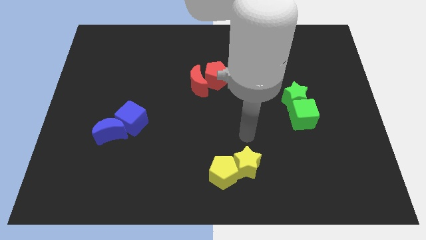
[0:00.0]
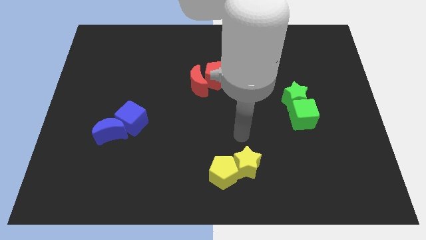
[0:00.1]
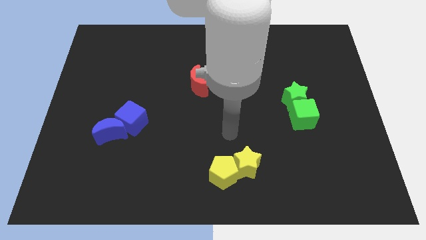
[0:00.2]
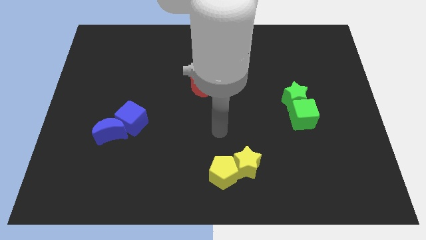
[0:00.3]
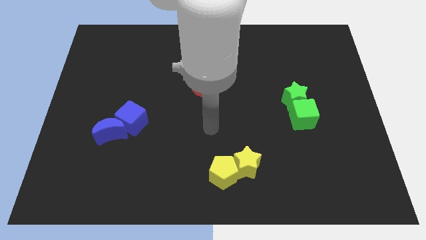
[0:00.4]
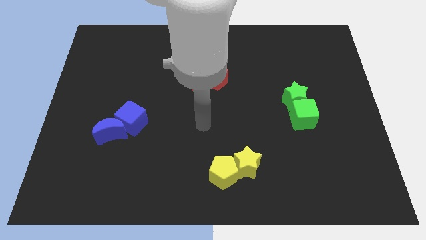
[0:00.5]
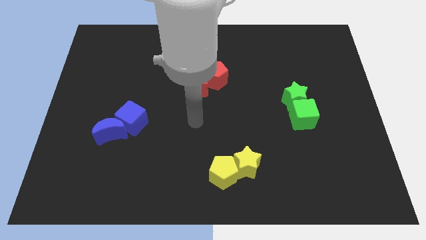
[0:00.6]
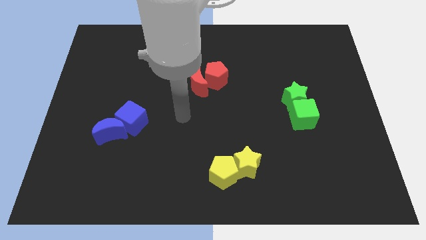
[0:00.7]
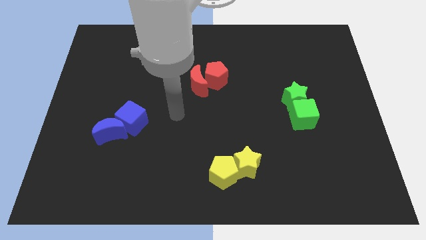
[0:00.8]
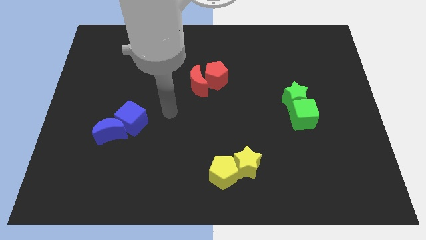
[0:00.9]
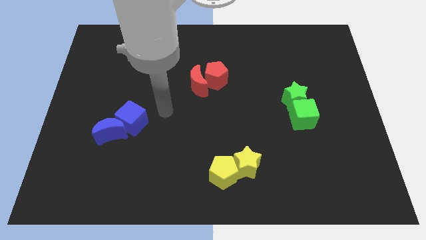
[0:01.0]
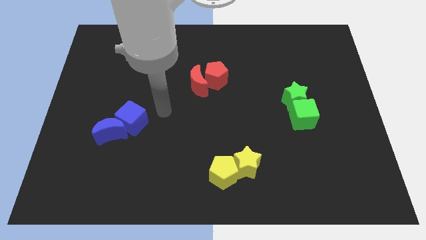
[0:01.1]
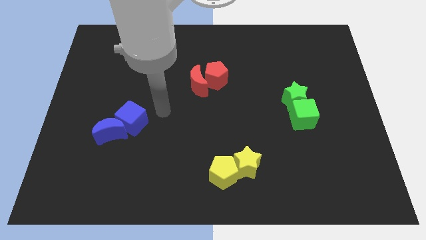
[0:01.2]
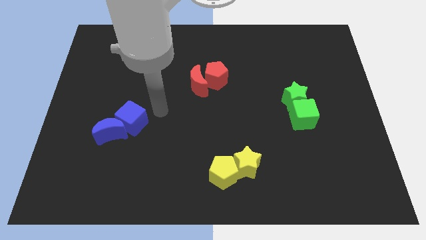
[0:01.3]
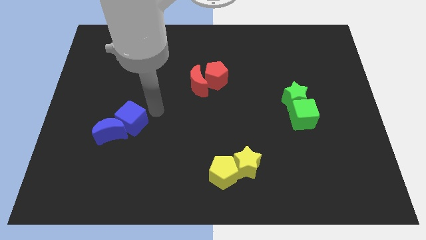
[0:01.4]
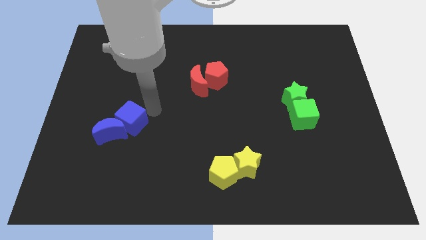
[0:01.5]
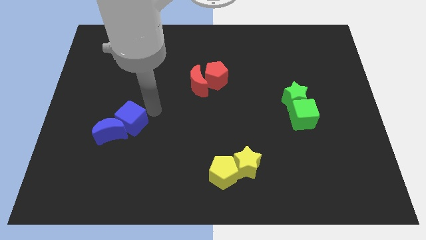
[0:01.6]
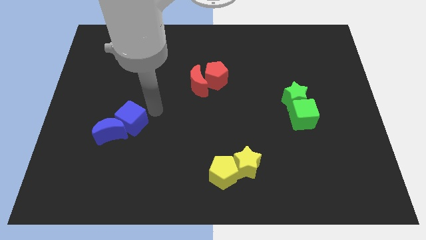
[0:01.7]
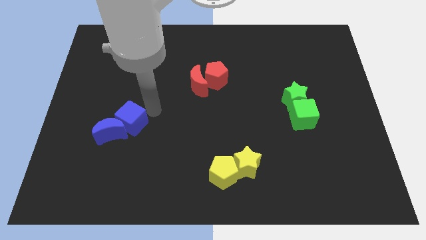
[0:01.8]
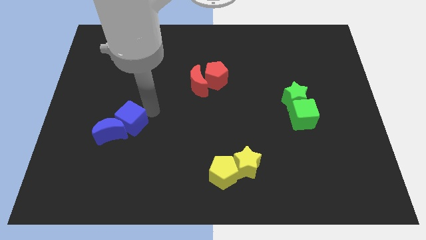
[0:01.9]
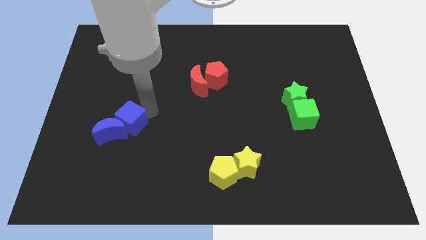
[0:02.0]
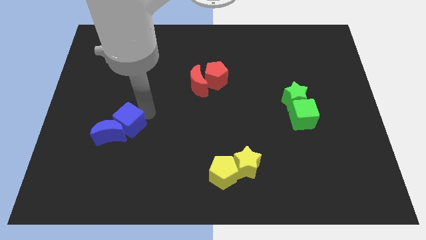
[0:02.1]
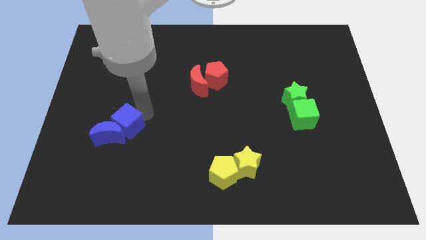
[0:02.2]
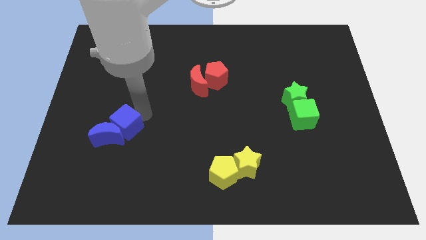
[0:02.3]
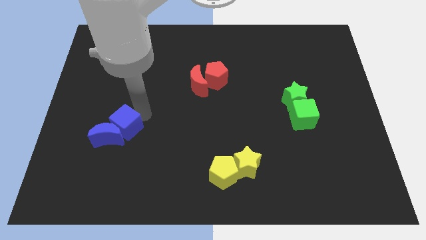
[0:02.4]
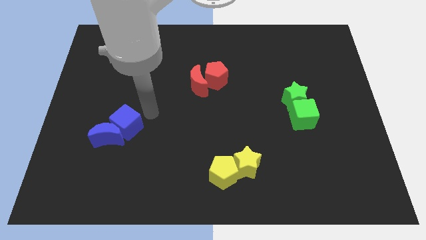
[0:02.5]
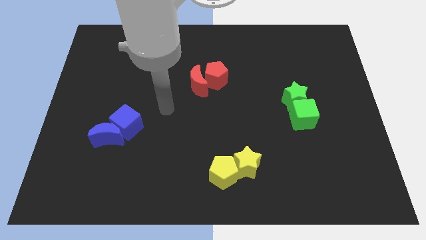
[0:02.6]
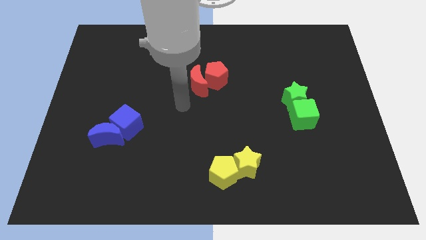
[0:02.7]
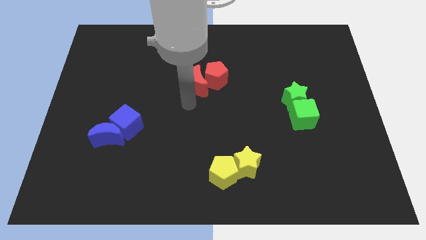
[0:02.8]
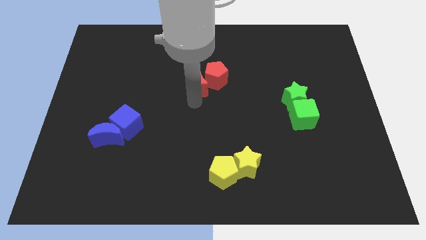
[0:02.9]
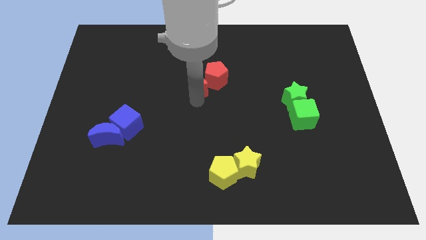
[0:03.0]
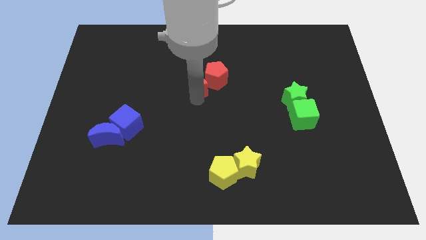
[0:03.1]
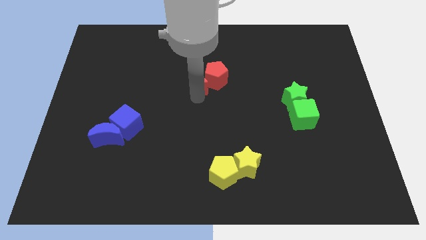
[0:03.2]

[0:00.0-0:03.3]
tap the top right side of the blue cube

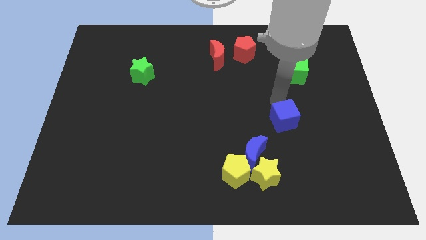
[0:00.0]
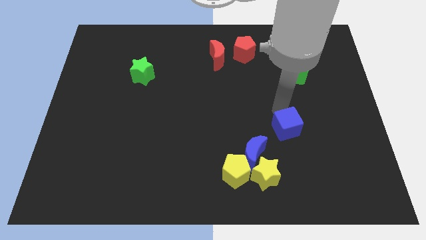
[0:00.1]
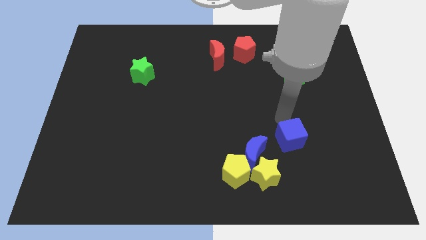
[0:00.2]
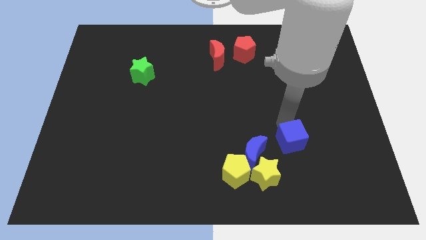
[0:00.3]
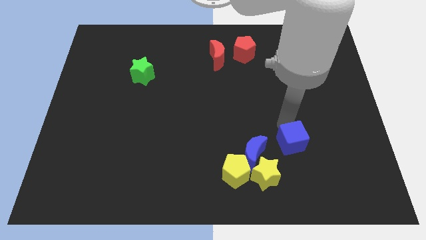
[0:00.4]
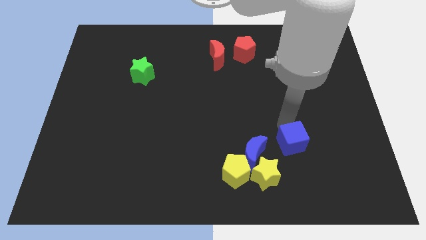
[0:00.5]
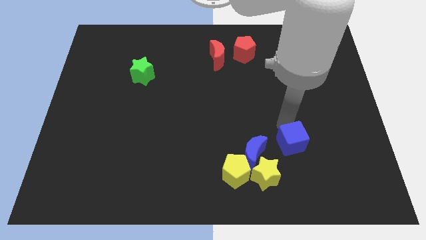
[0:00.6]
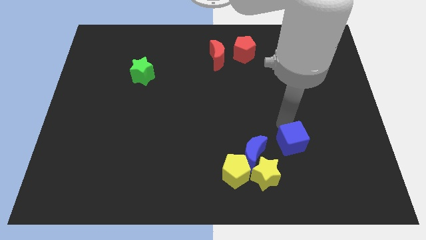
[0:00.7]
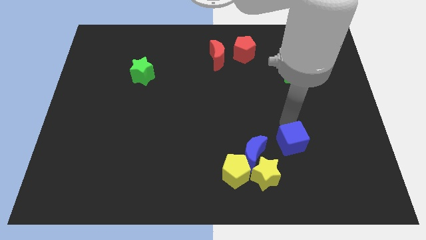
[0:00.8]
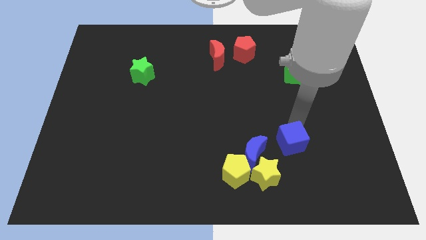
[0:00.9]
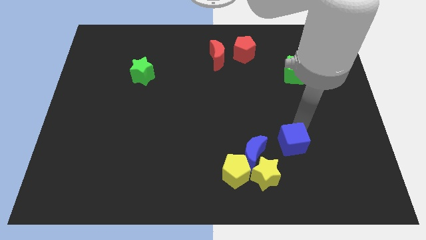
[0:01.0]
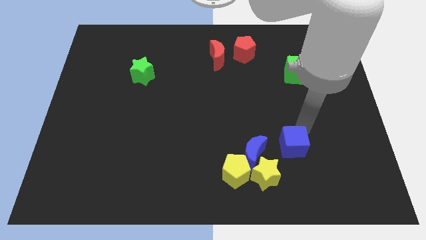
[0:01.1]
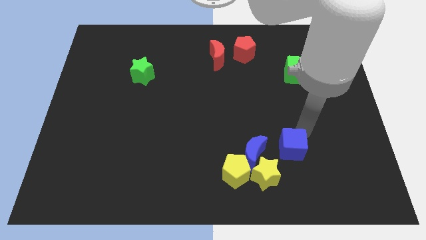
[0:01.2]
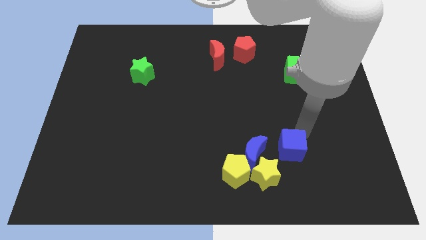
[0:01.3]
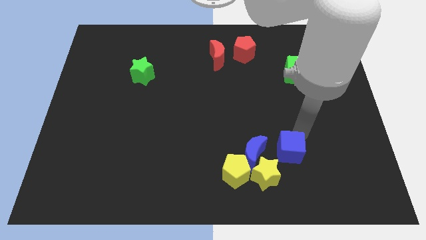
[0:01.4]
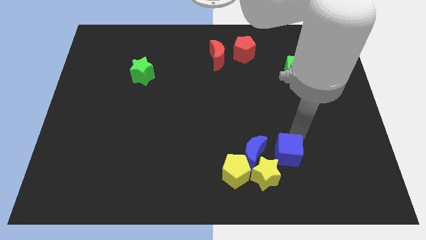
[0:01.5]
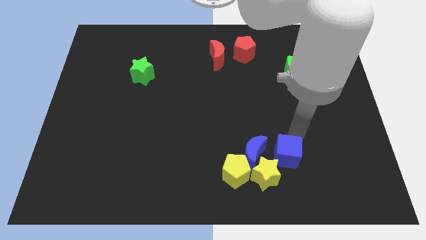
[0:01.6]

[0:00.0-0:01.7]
move the blue cube towards the bottom

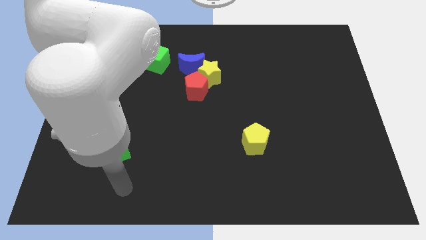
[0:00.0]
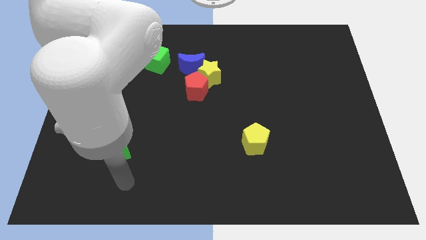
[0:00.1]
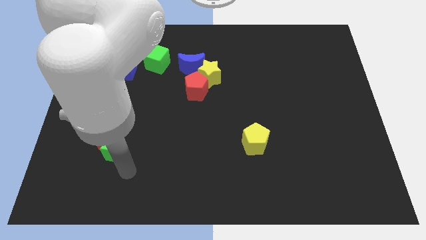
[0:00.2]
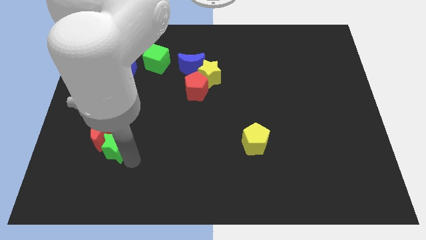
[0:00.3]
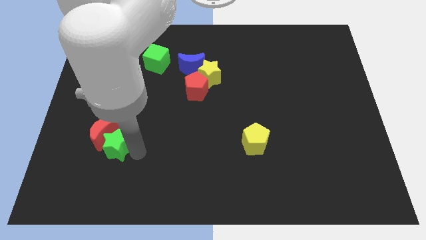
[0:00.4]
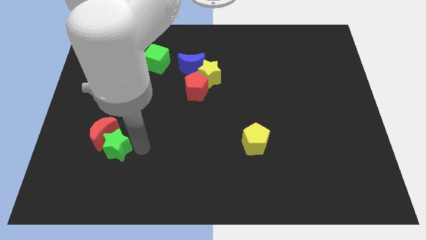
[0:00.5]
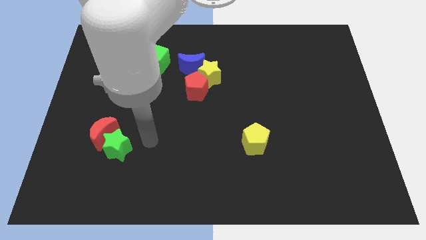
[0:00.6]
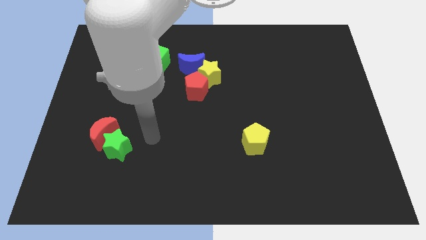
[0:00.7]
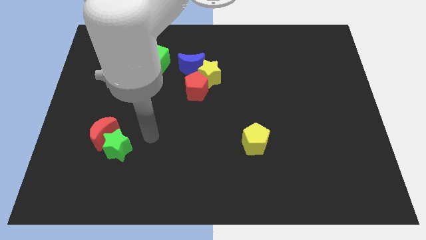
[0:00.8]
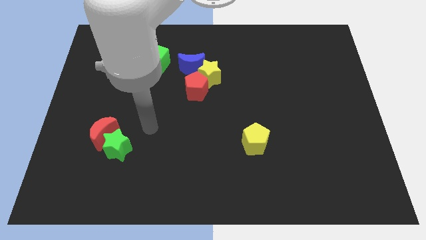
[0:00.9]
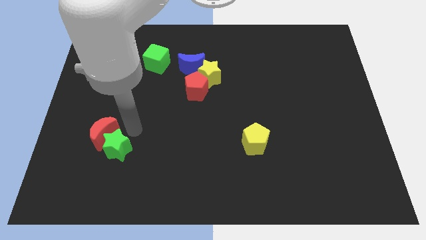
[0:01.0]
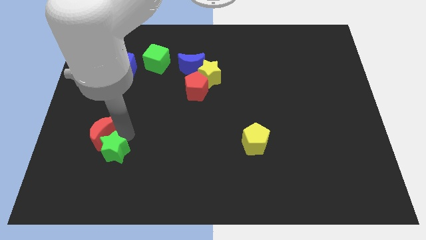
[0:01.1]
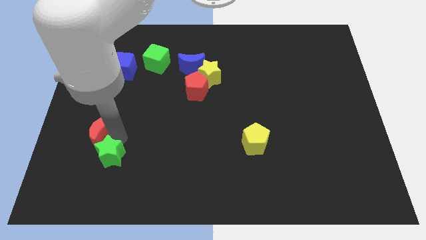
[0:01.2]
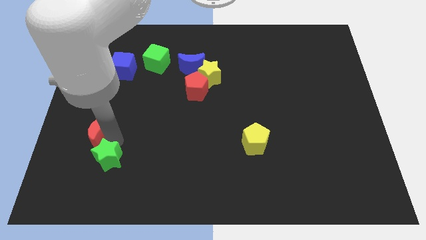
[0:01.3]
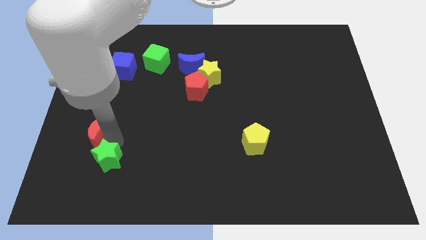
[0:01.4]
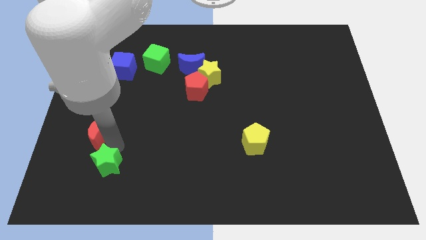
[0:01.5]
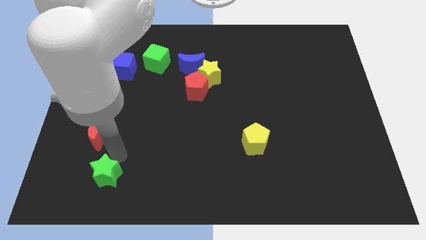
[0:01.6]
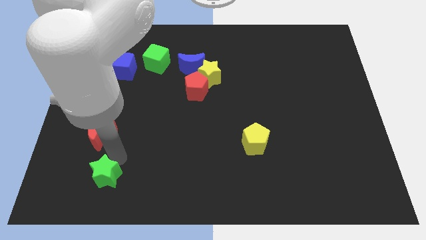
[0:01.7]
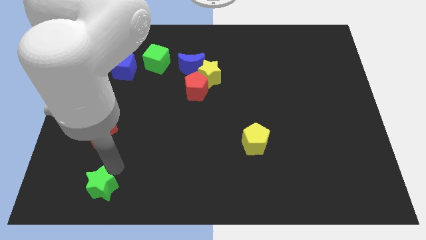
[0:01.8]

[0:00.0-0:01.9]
separate the green star from red crescent

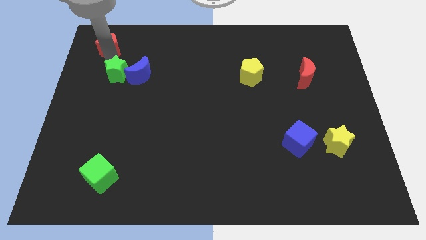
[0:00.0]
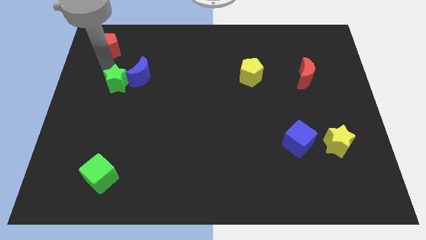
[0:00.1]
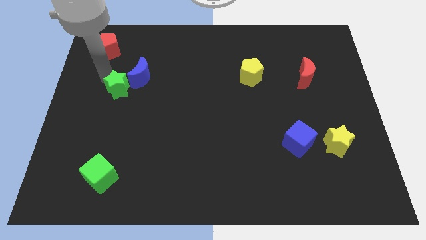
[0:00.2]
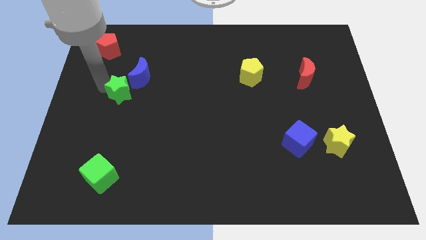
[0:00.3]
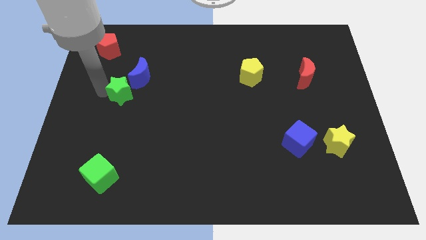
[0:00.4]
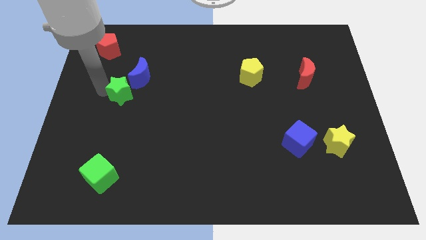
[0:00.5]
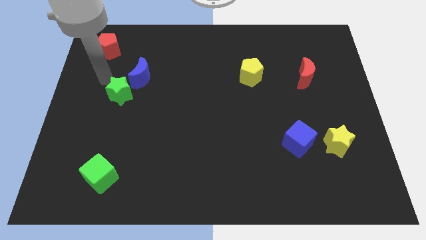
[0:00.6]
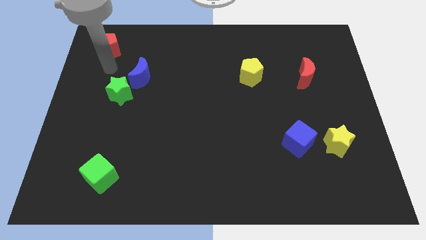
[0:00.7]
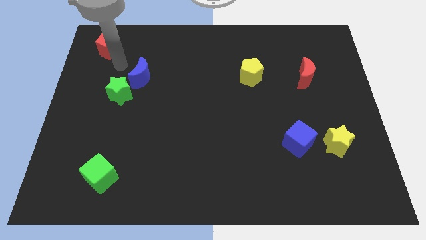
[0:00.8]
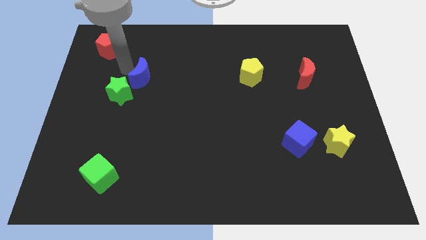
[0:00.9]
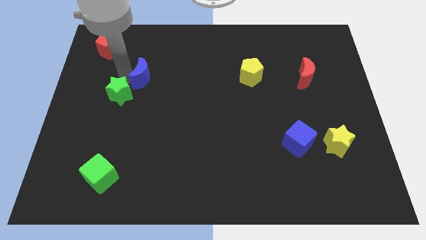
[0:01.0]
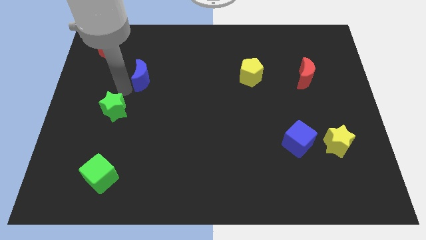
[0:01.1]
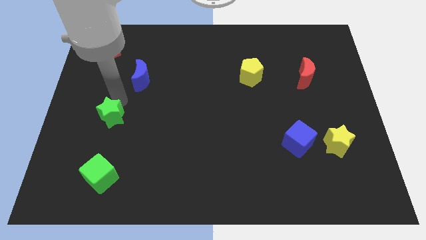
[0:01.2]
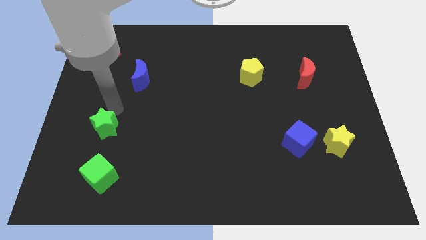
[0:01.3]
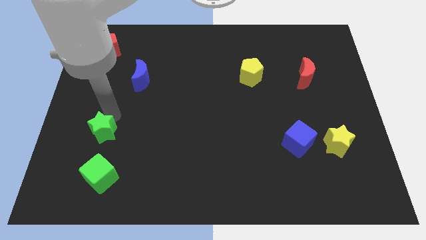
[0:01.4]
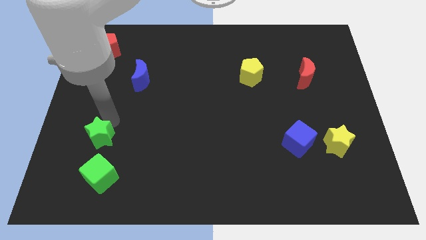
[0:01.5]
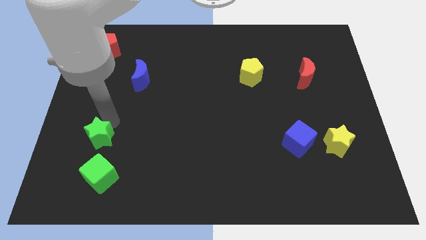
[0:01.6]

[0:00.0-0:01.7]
push the green star to the top of green cube

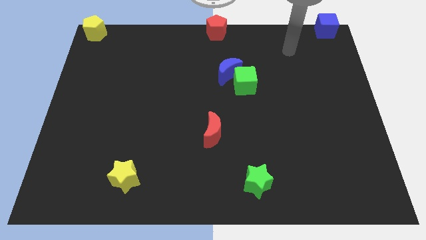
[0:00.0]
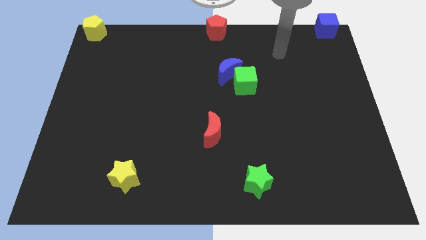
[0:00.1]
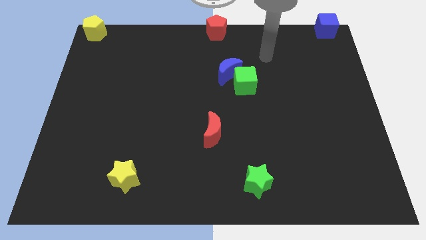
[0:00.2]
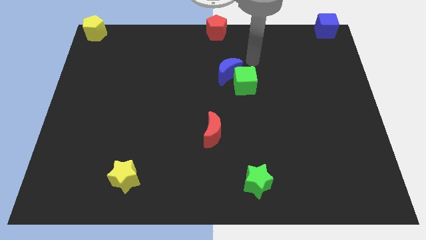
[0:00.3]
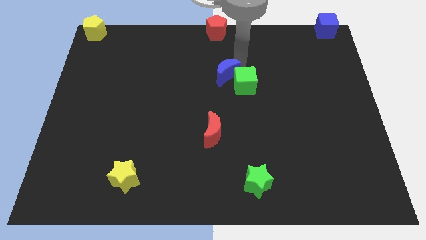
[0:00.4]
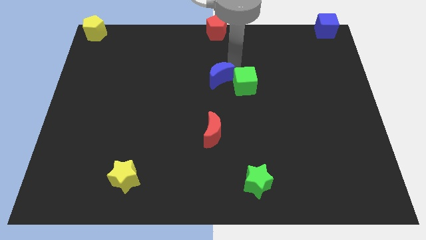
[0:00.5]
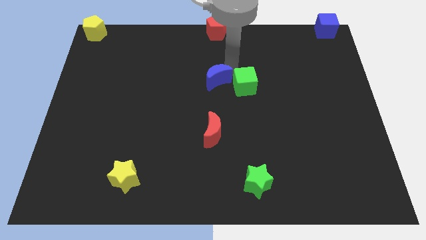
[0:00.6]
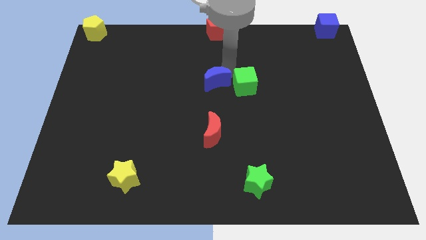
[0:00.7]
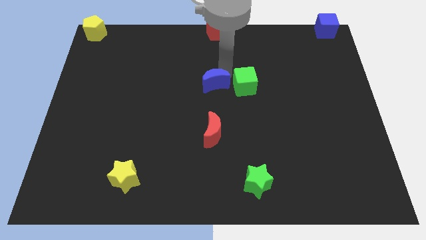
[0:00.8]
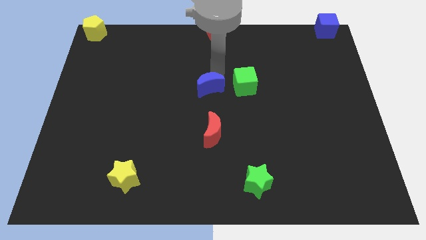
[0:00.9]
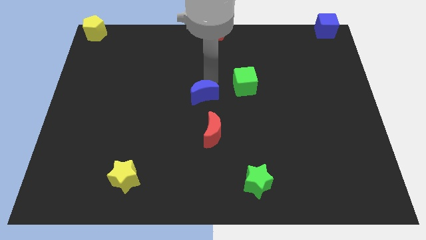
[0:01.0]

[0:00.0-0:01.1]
tap blue moon to the center
